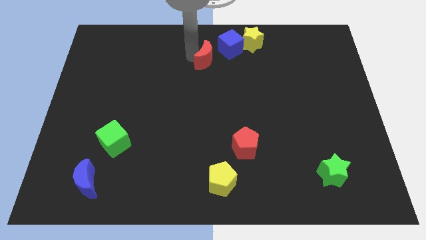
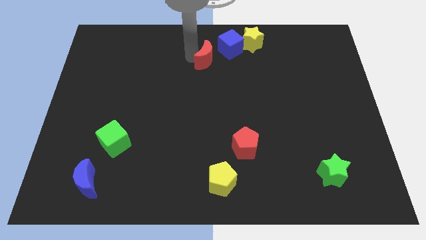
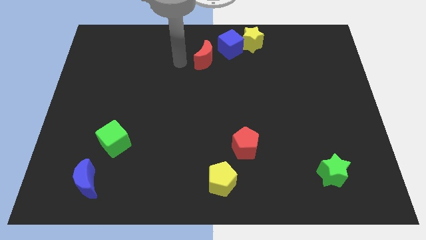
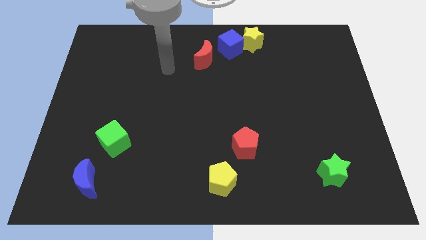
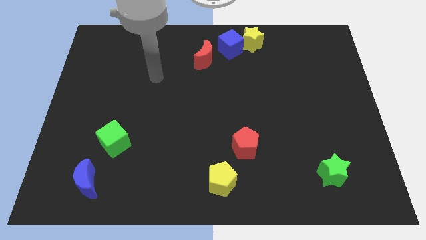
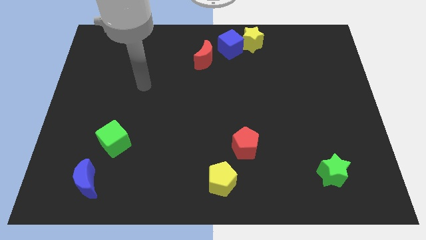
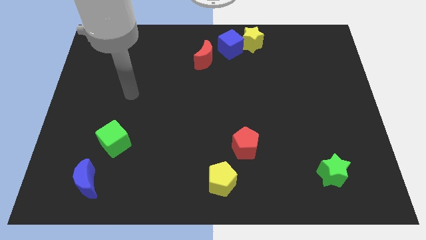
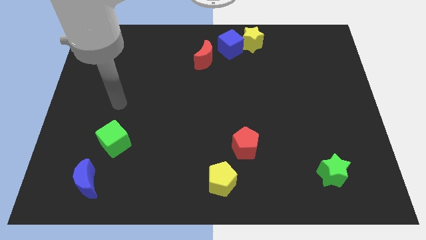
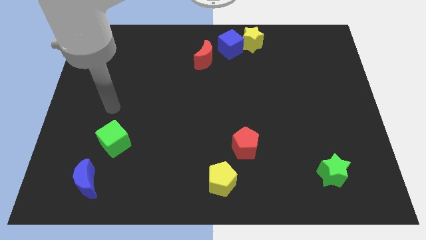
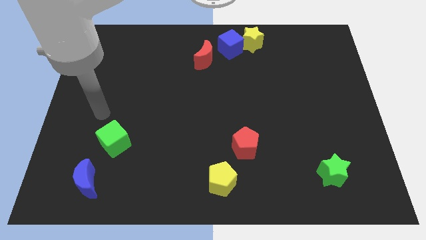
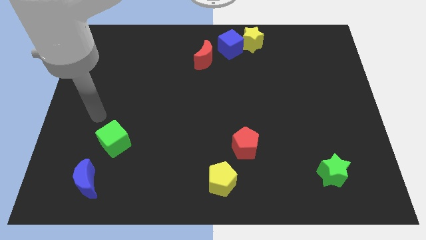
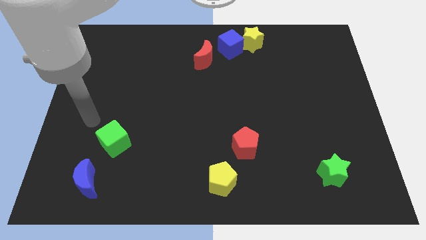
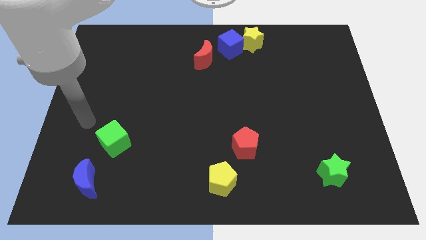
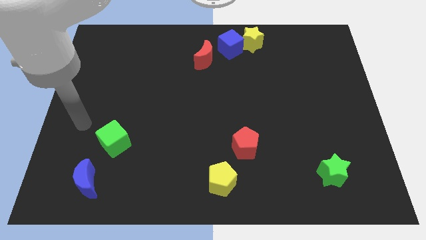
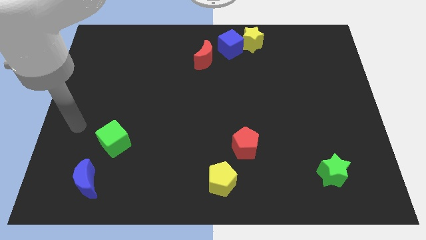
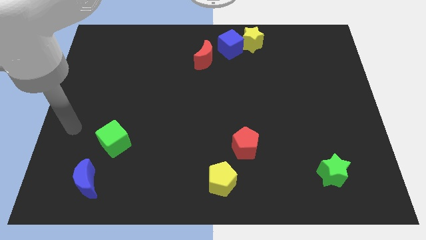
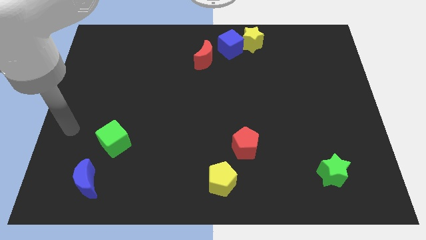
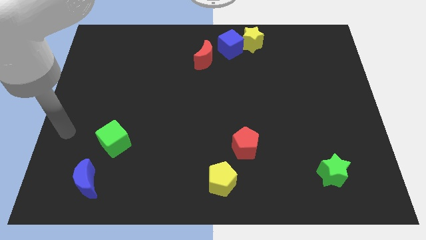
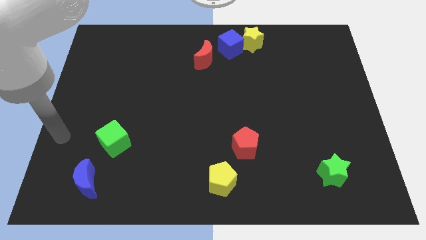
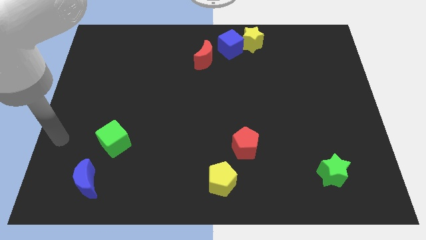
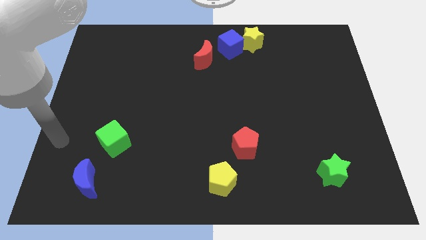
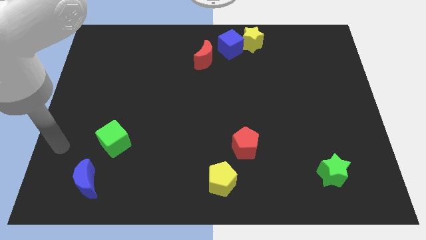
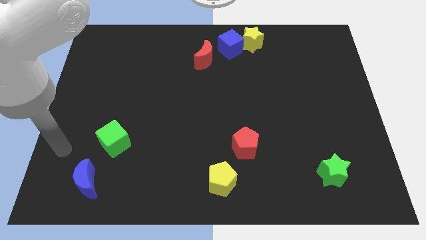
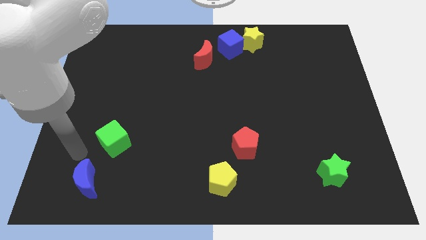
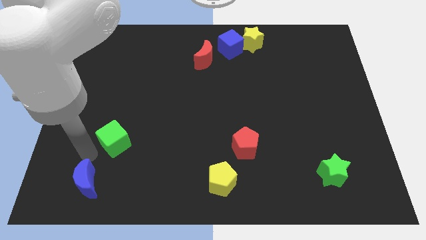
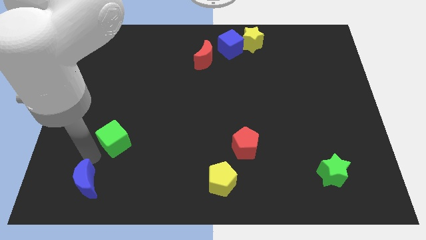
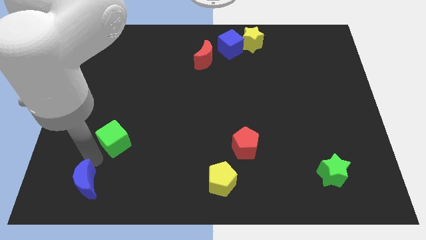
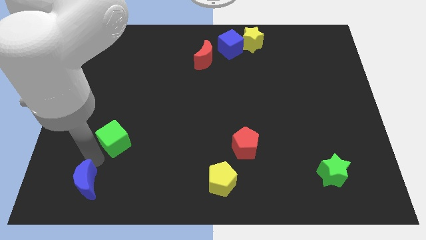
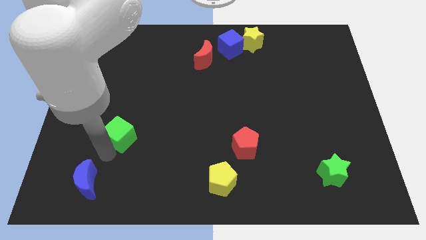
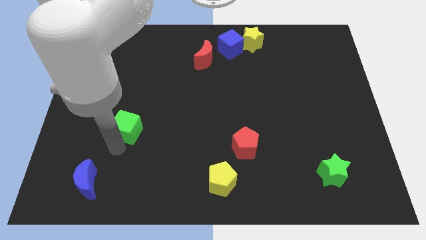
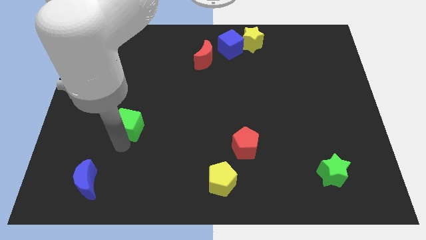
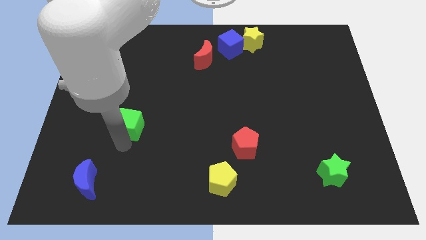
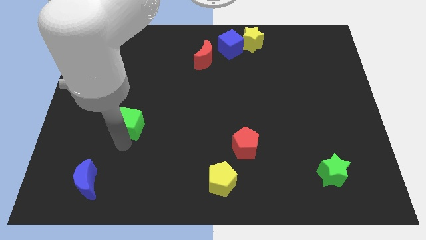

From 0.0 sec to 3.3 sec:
push the green cube upwards

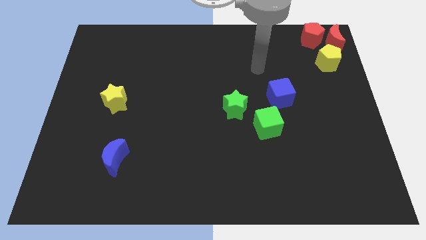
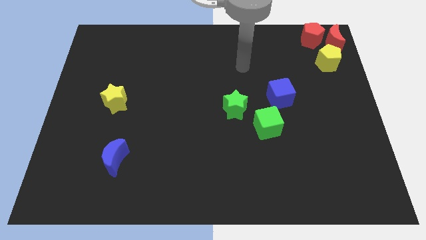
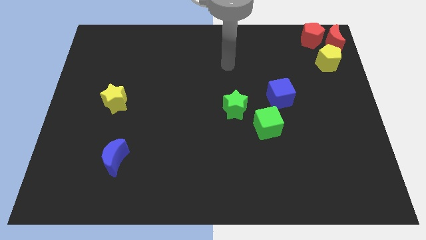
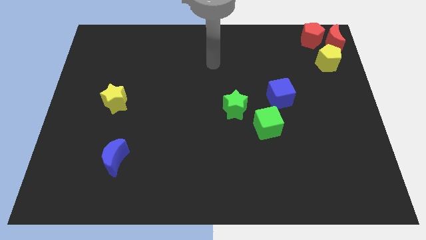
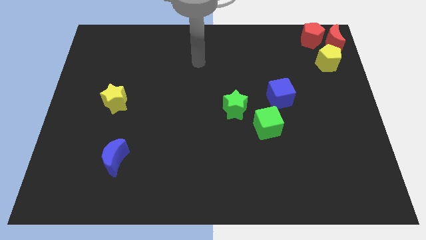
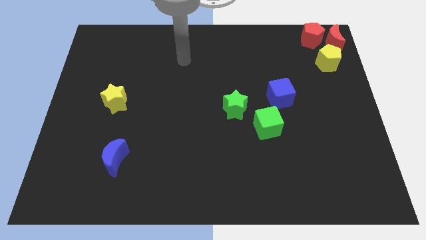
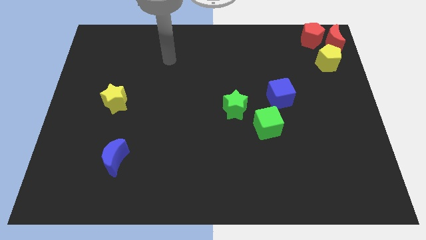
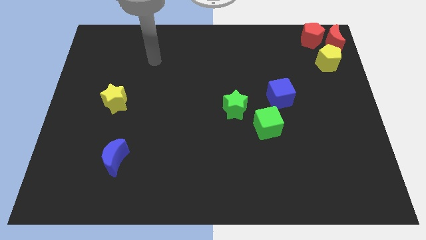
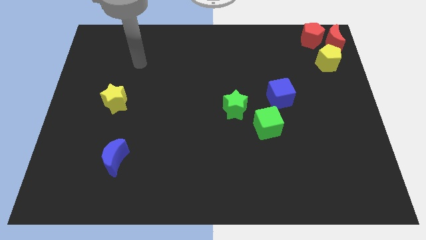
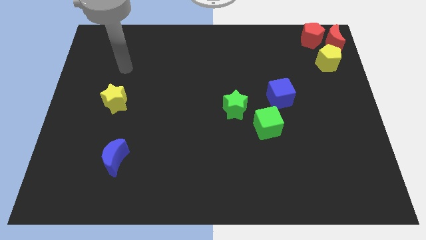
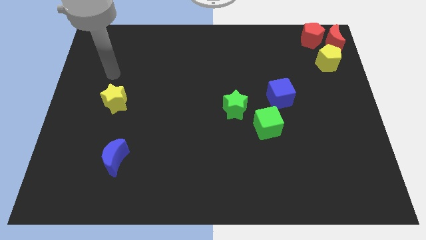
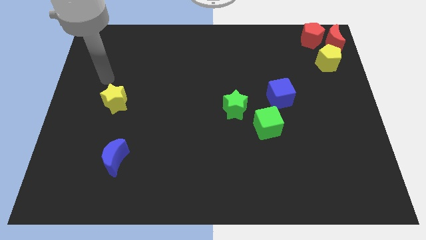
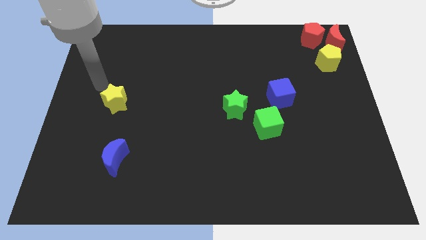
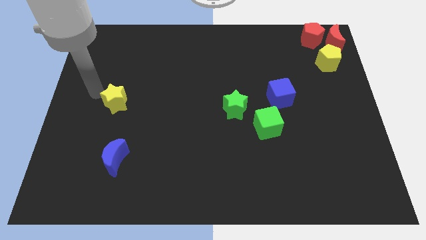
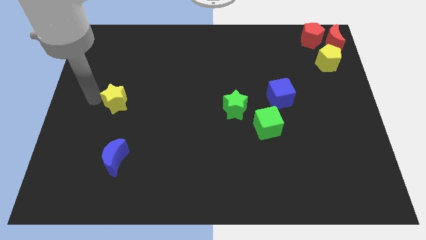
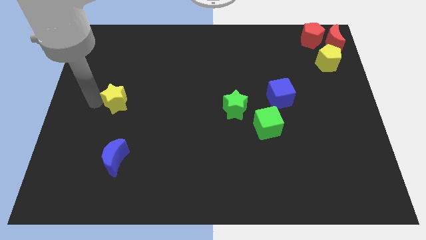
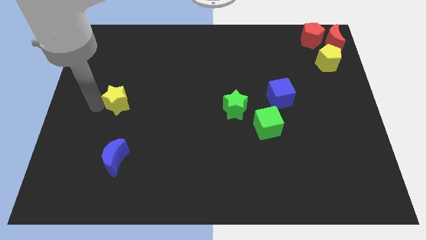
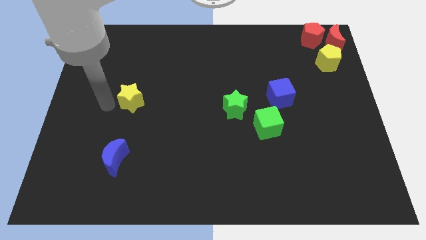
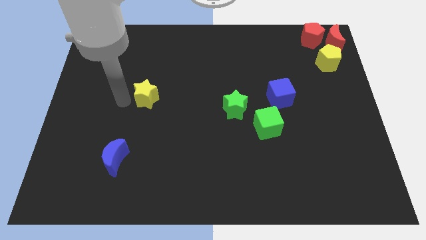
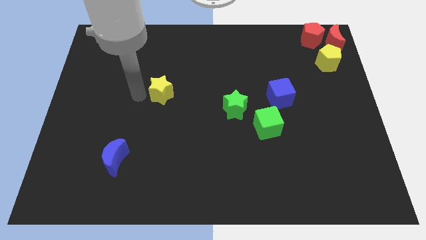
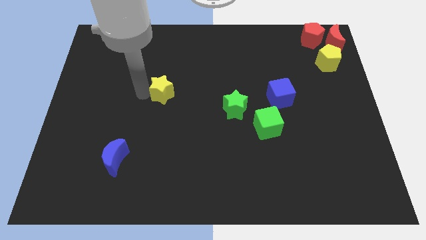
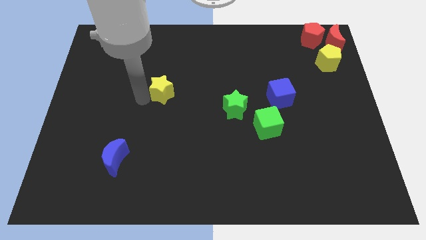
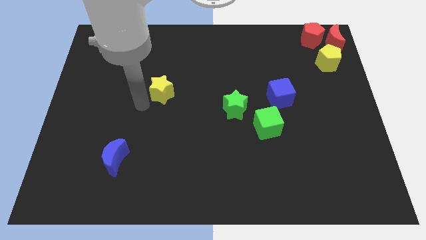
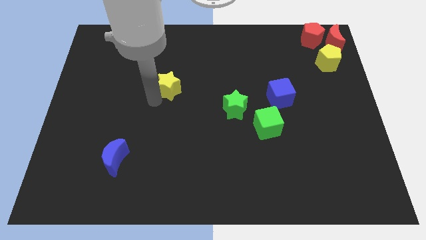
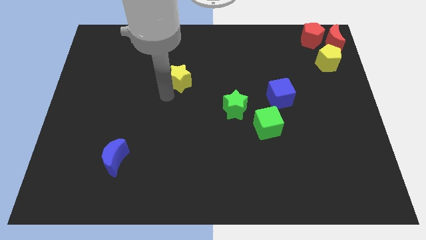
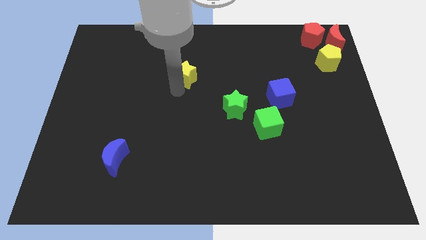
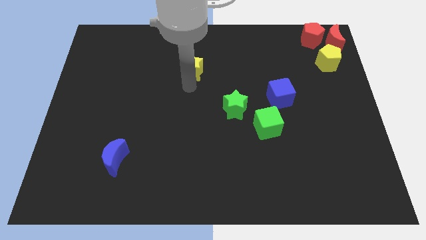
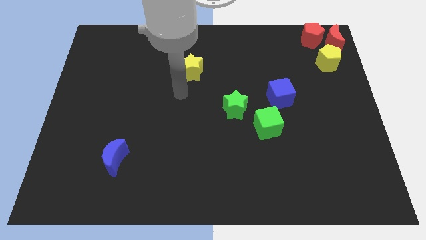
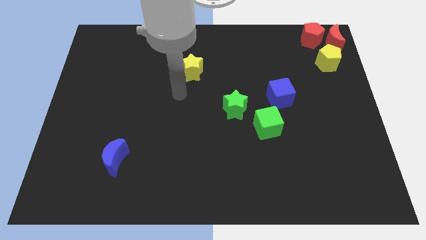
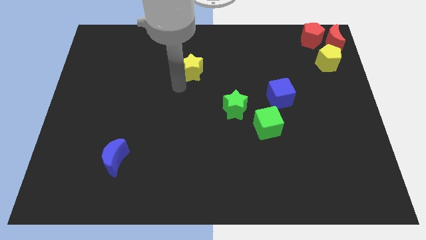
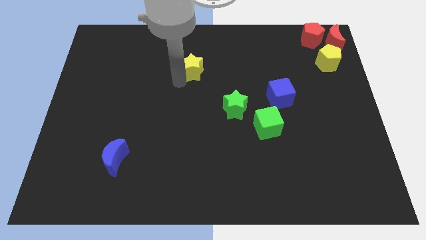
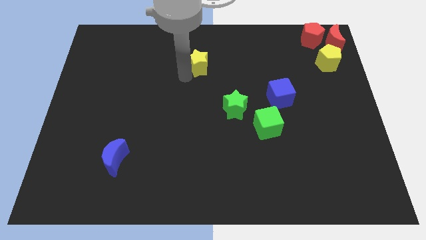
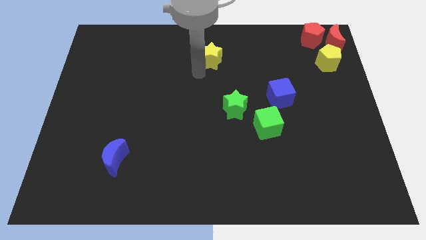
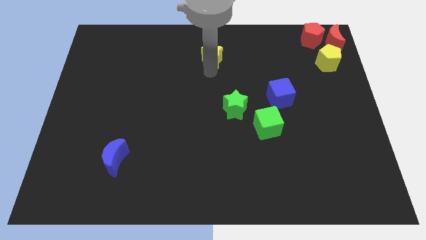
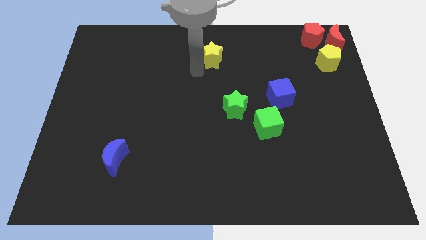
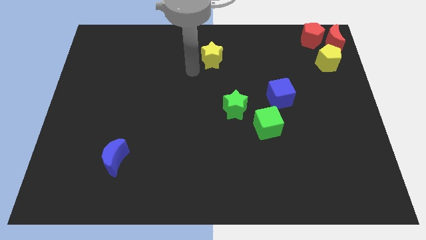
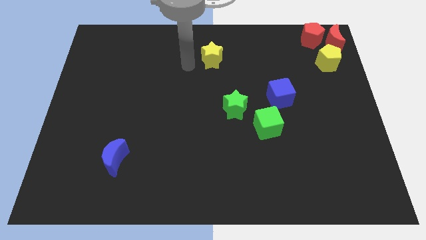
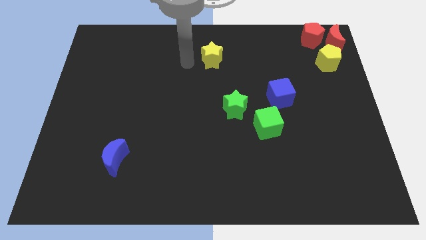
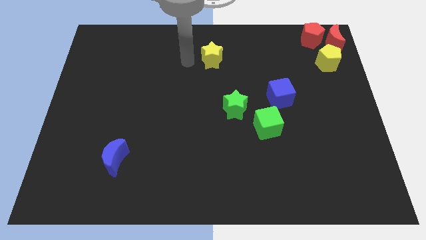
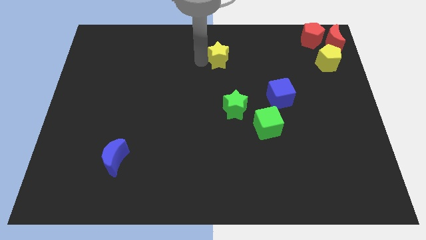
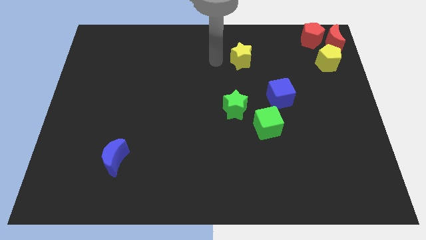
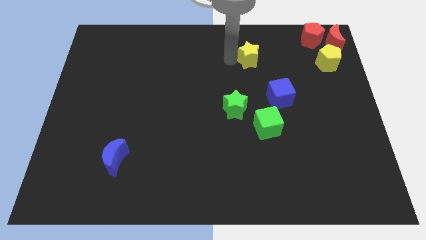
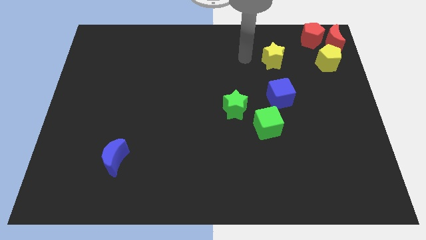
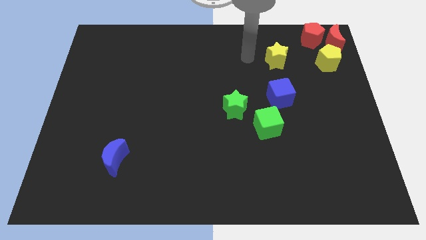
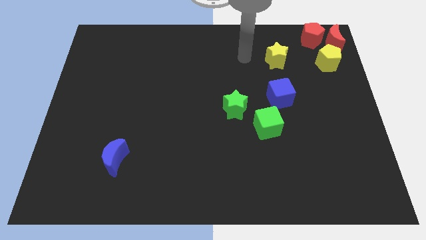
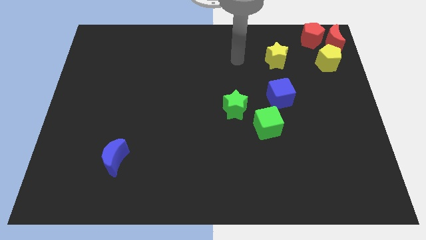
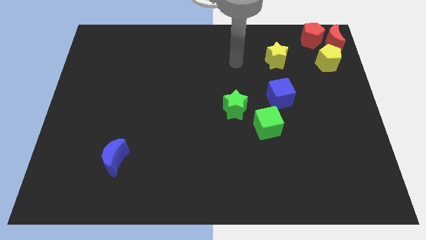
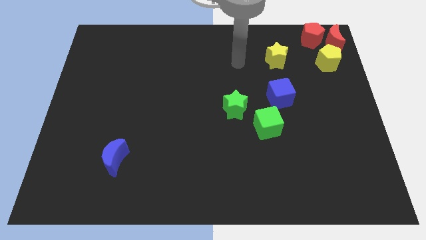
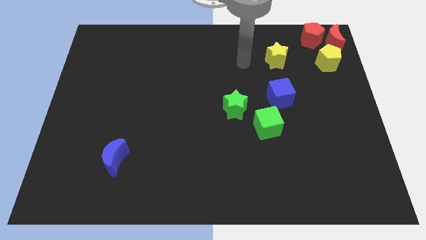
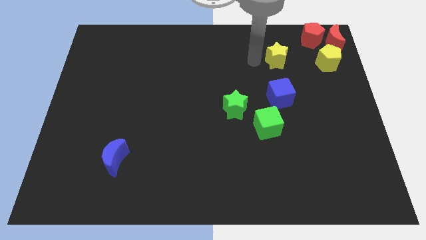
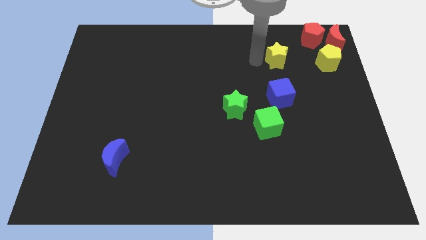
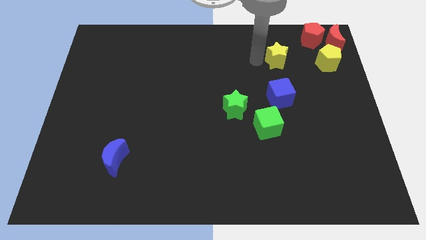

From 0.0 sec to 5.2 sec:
push the yellow star to the left of the yellow pentagon

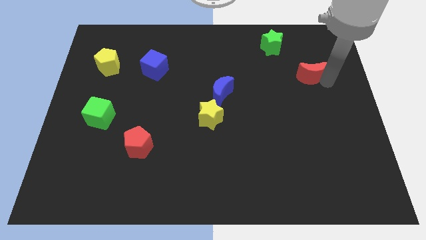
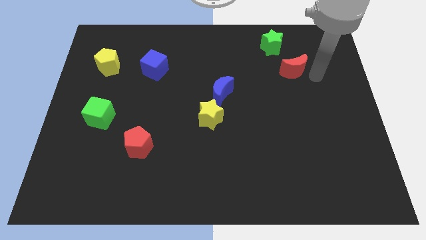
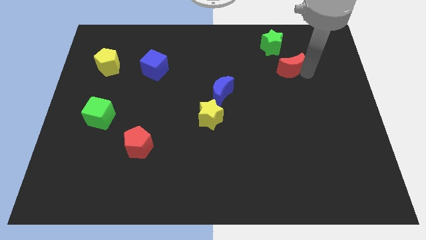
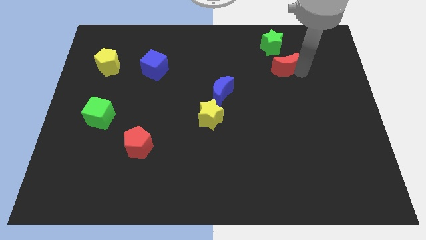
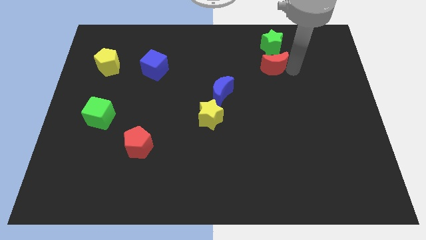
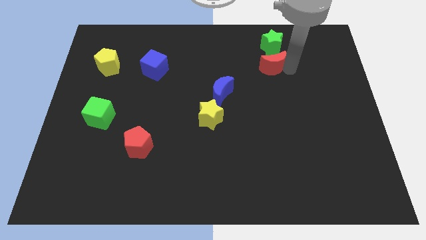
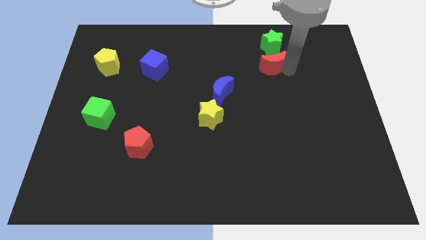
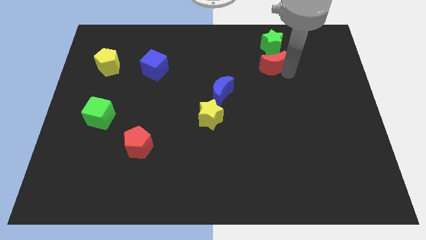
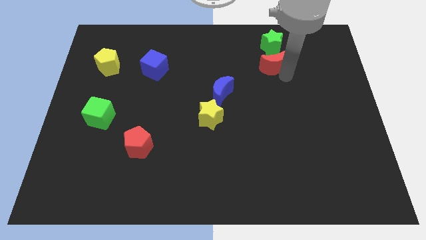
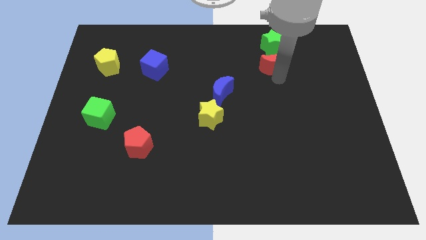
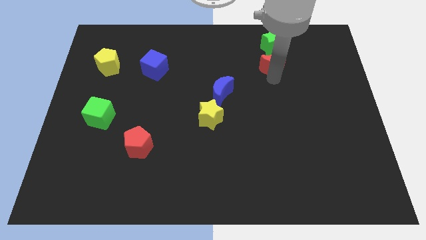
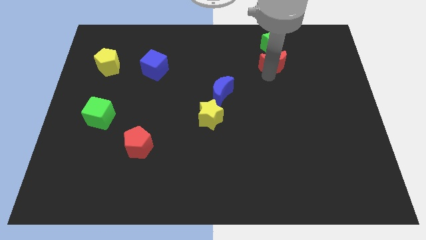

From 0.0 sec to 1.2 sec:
place the red crescent below the green star
